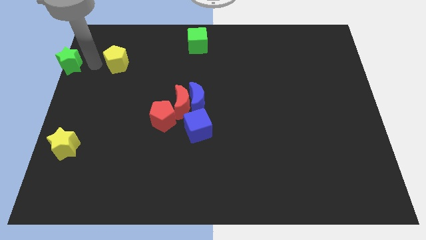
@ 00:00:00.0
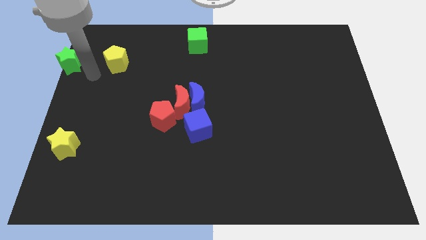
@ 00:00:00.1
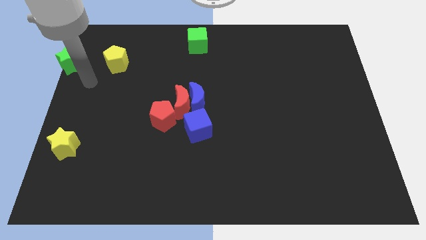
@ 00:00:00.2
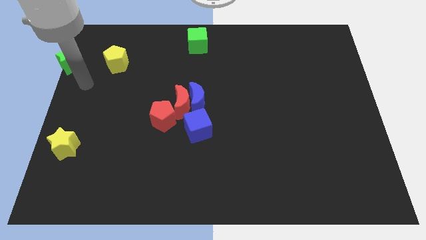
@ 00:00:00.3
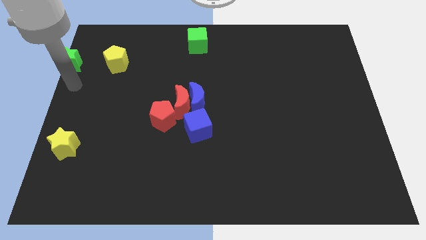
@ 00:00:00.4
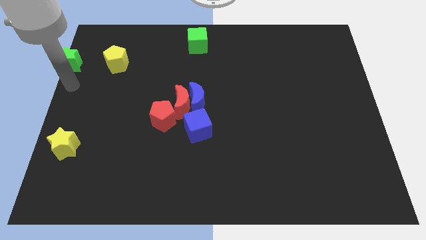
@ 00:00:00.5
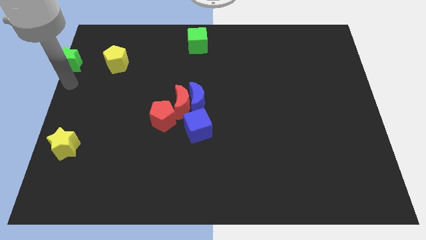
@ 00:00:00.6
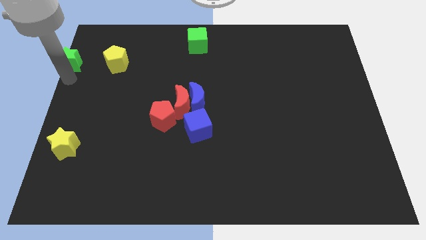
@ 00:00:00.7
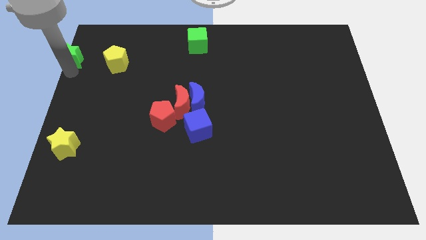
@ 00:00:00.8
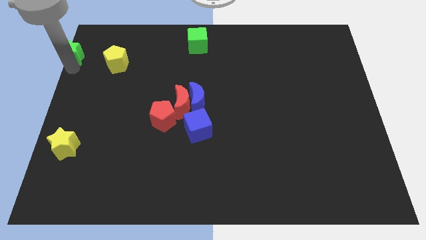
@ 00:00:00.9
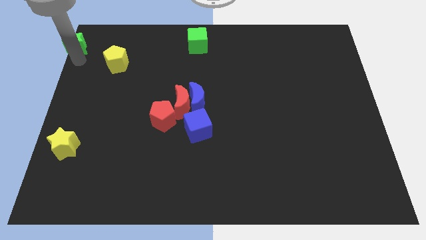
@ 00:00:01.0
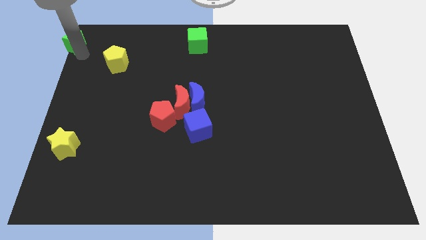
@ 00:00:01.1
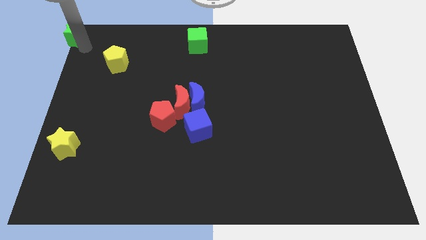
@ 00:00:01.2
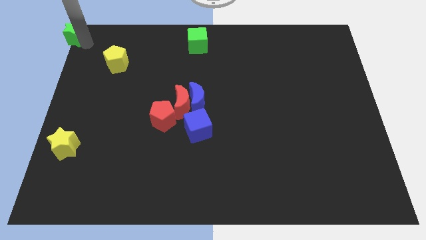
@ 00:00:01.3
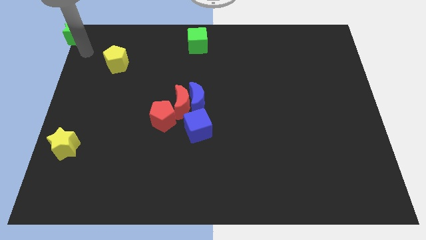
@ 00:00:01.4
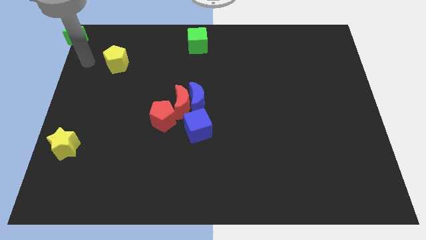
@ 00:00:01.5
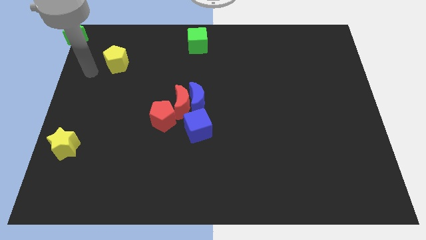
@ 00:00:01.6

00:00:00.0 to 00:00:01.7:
place the green star at top left corner of the board

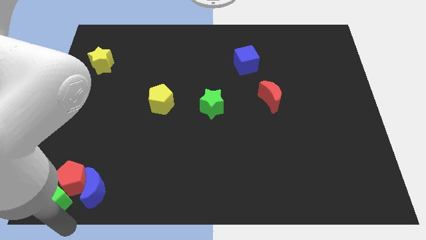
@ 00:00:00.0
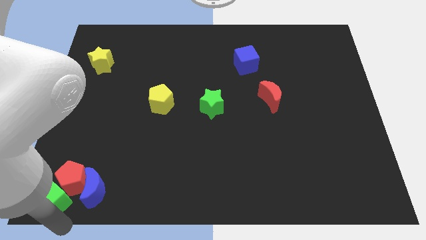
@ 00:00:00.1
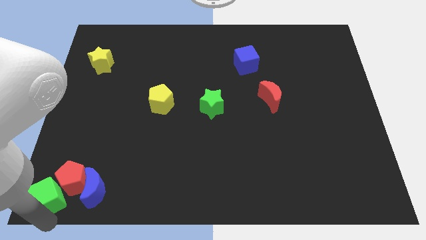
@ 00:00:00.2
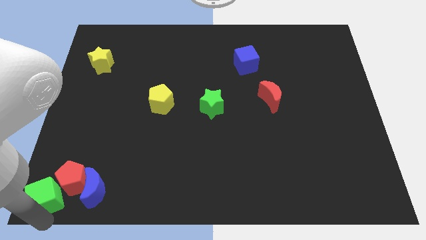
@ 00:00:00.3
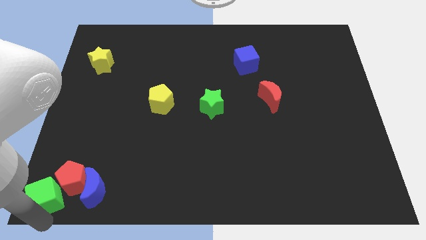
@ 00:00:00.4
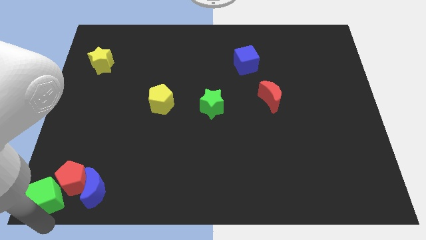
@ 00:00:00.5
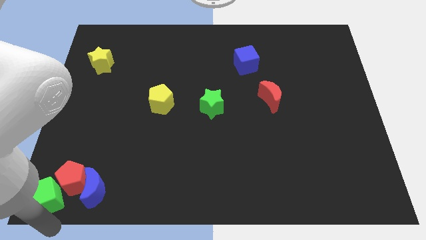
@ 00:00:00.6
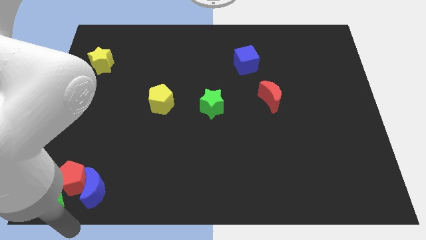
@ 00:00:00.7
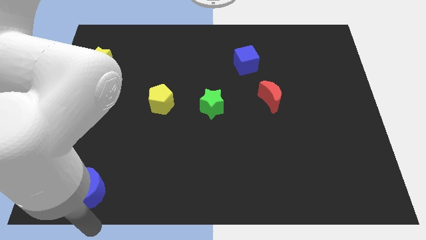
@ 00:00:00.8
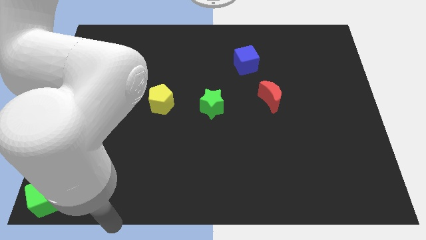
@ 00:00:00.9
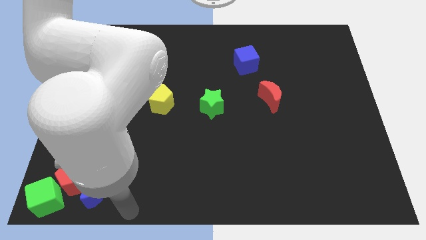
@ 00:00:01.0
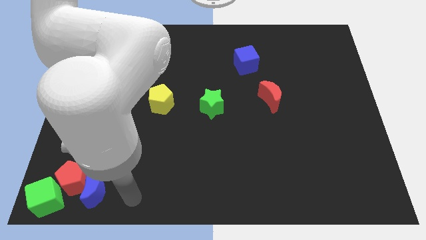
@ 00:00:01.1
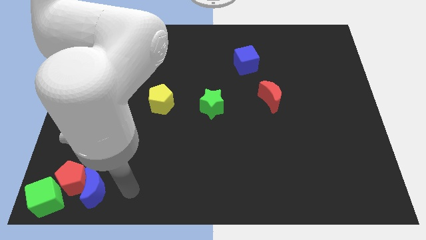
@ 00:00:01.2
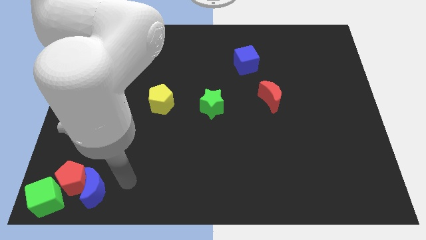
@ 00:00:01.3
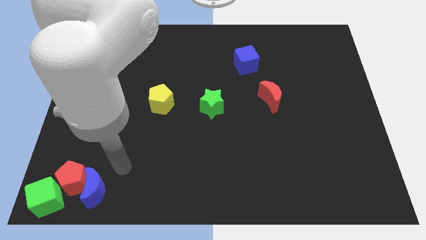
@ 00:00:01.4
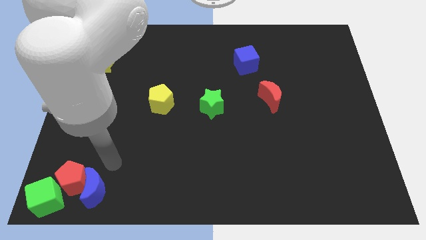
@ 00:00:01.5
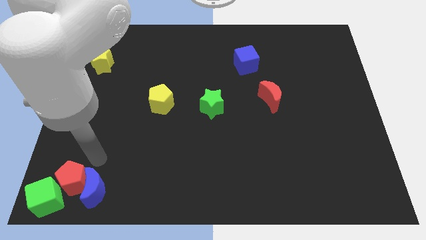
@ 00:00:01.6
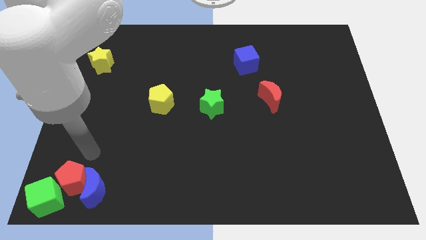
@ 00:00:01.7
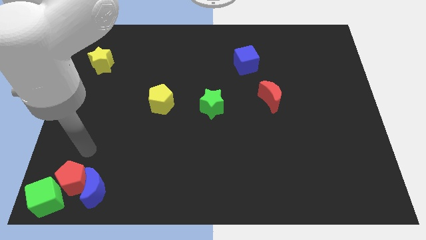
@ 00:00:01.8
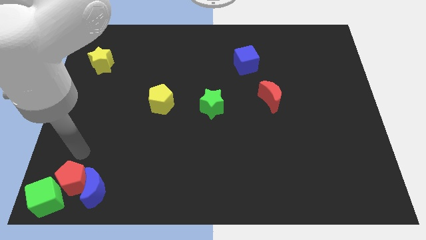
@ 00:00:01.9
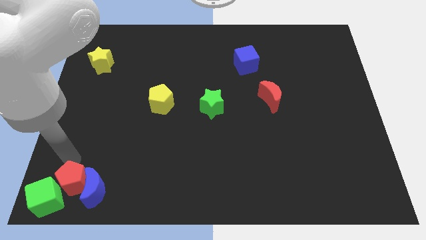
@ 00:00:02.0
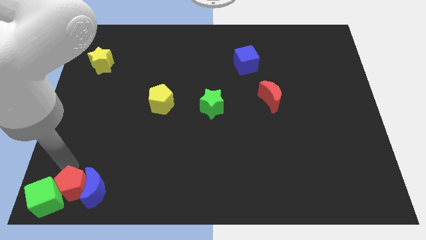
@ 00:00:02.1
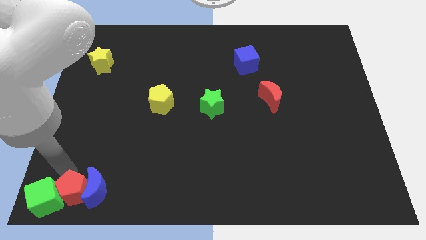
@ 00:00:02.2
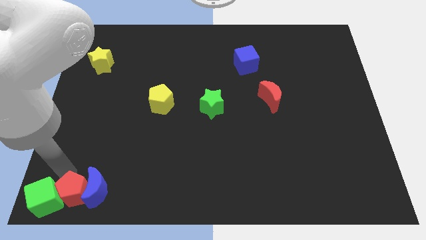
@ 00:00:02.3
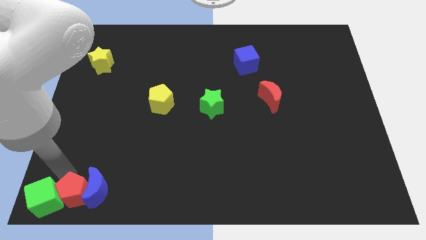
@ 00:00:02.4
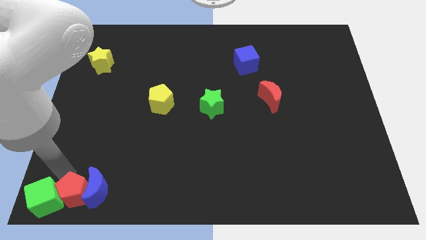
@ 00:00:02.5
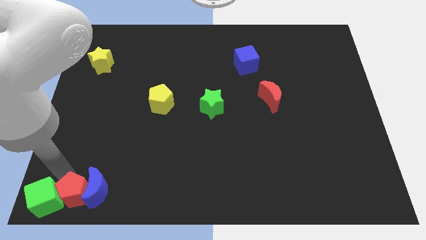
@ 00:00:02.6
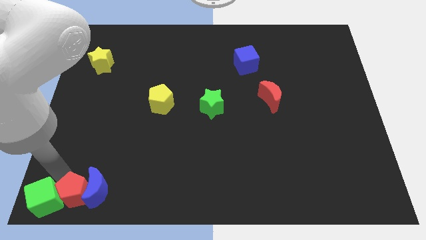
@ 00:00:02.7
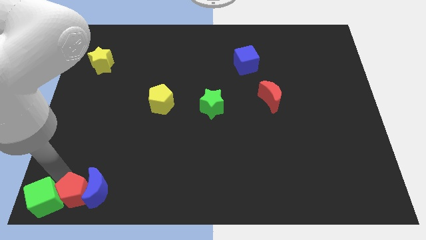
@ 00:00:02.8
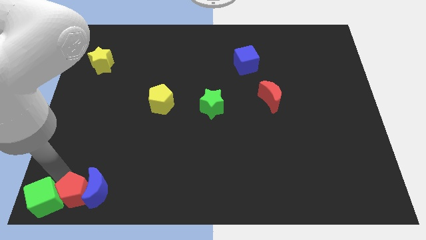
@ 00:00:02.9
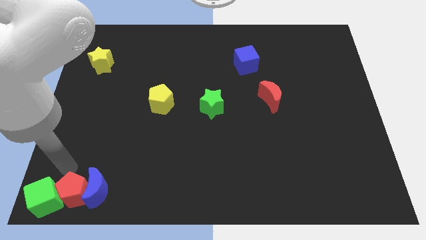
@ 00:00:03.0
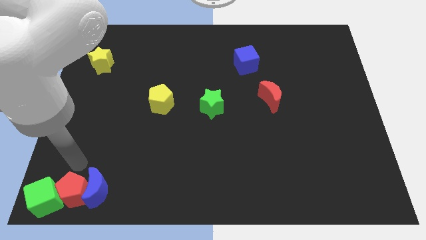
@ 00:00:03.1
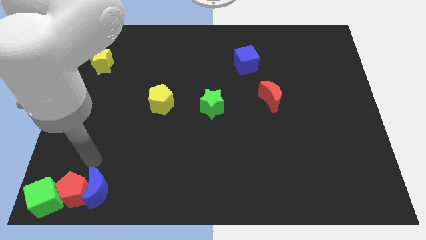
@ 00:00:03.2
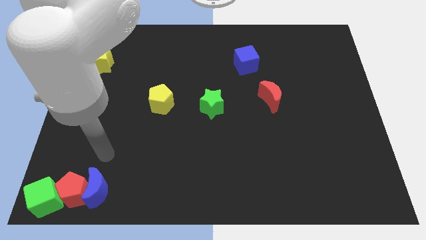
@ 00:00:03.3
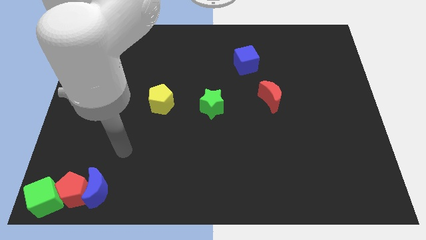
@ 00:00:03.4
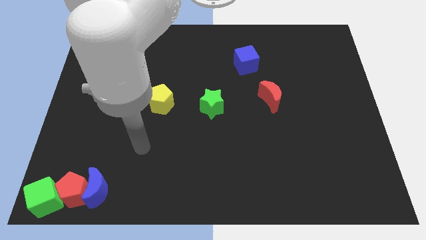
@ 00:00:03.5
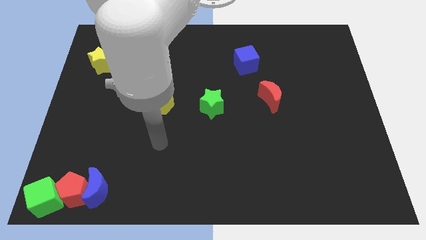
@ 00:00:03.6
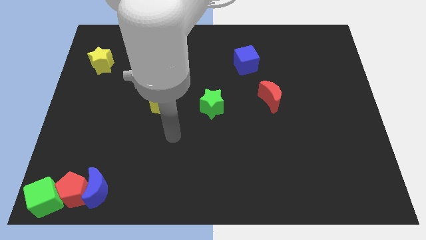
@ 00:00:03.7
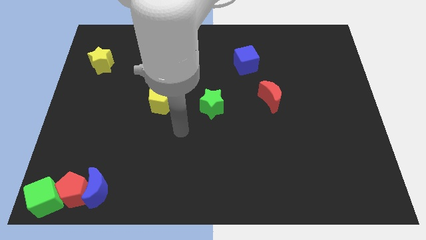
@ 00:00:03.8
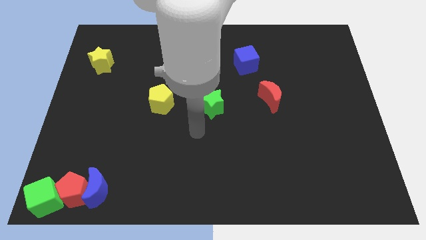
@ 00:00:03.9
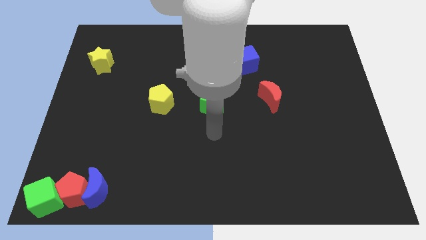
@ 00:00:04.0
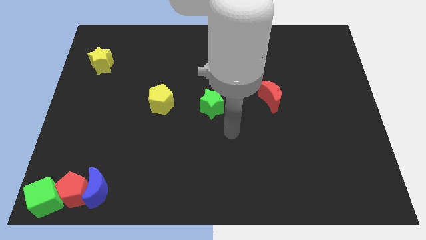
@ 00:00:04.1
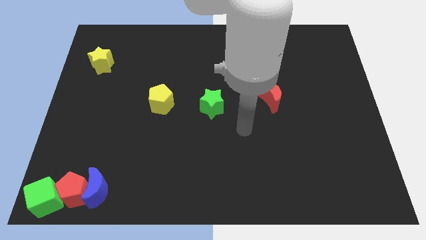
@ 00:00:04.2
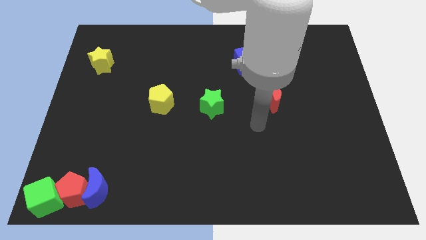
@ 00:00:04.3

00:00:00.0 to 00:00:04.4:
push the red pentagon in between green cube and blue crescent

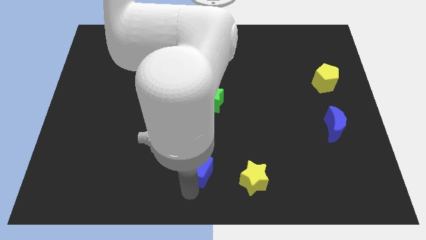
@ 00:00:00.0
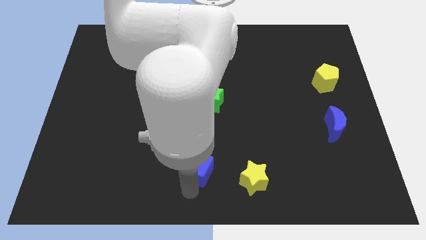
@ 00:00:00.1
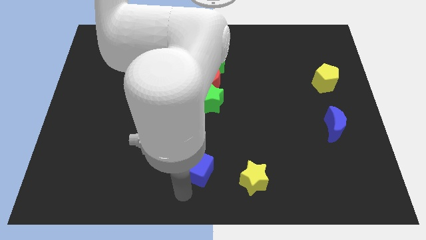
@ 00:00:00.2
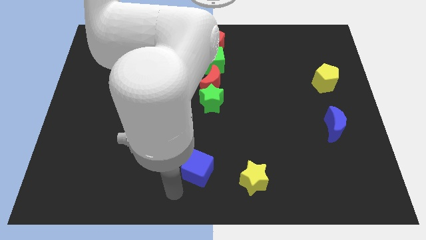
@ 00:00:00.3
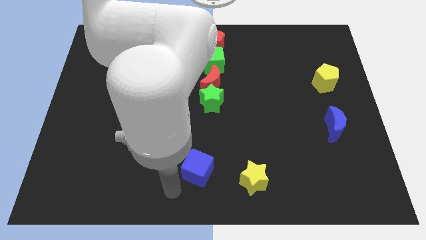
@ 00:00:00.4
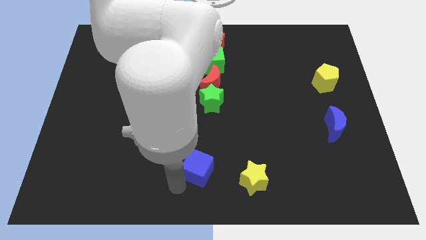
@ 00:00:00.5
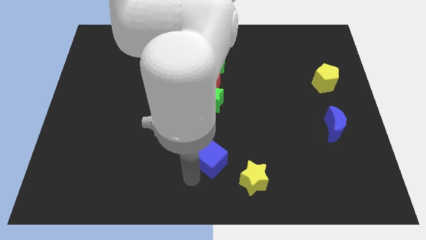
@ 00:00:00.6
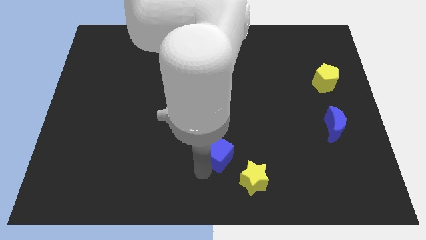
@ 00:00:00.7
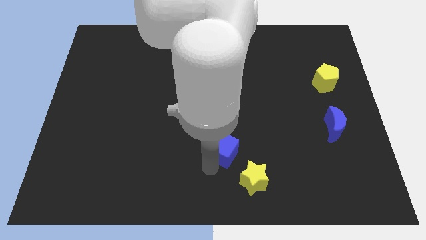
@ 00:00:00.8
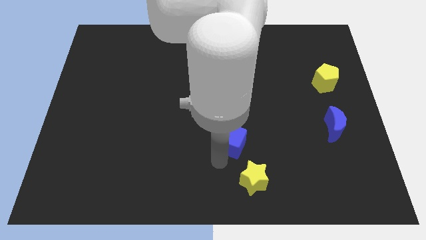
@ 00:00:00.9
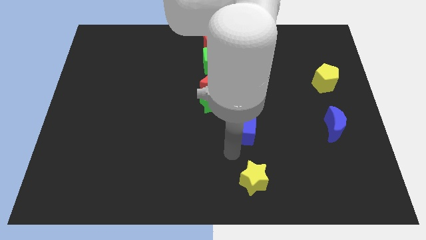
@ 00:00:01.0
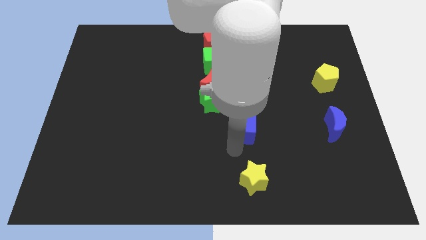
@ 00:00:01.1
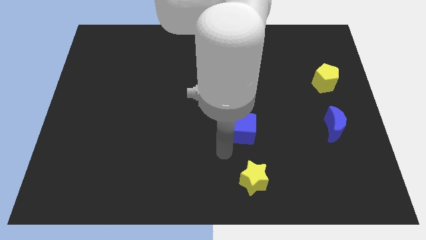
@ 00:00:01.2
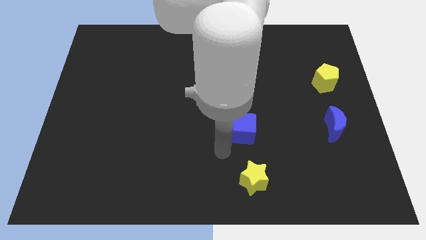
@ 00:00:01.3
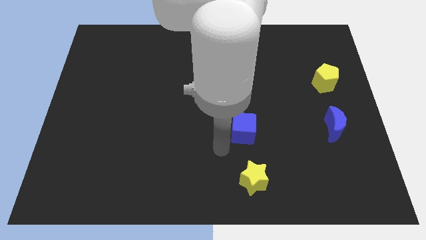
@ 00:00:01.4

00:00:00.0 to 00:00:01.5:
move blue cube to the center of the board

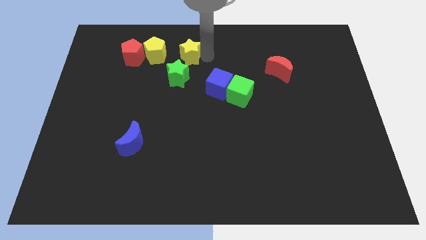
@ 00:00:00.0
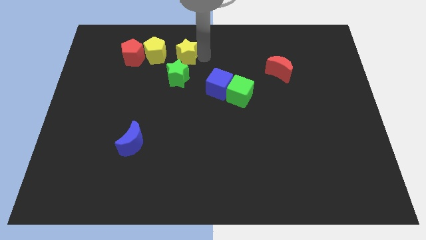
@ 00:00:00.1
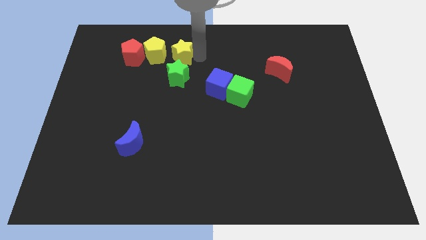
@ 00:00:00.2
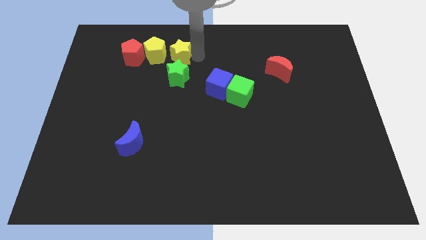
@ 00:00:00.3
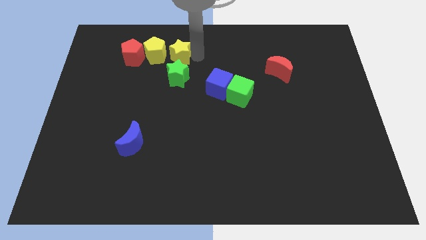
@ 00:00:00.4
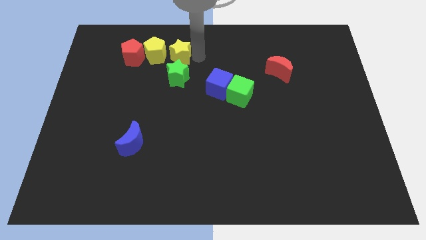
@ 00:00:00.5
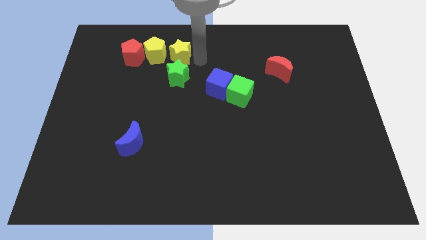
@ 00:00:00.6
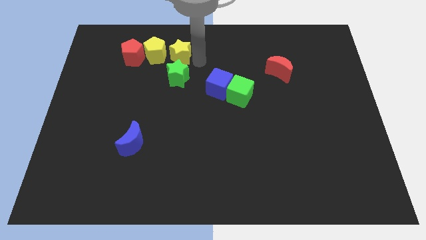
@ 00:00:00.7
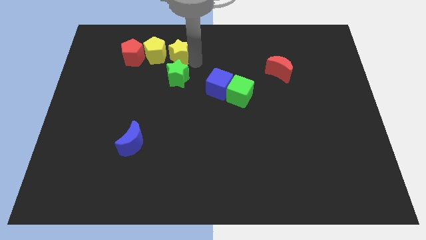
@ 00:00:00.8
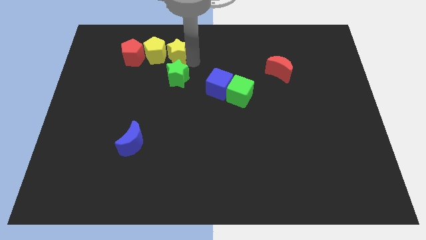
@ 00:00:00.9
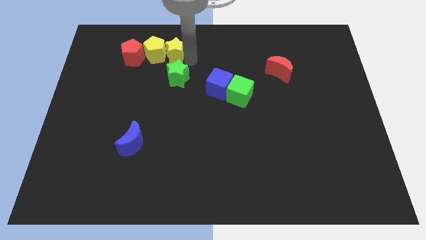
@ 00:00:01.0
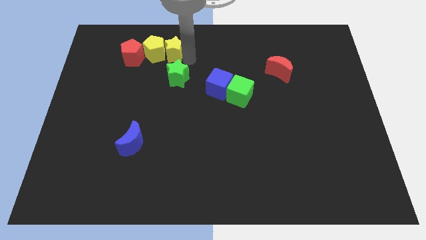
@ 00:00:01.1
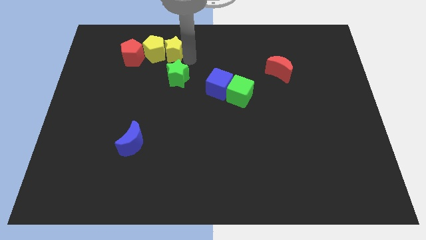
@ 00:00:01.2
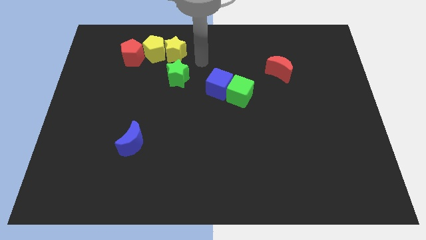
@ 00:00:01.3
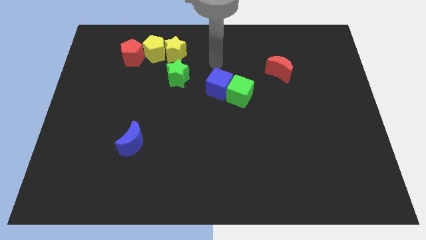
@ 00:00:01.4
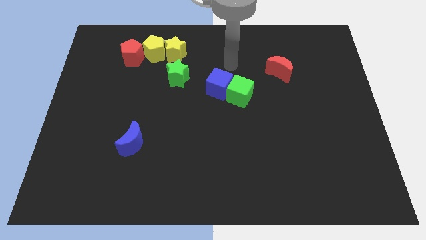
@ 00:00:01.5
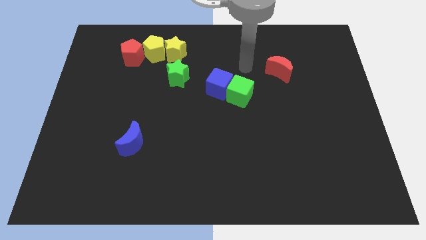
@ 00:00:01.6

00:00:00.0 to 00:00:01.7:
move the yellow star to the right side of the yellow pentagon
